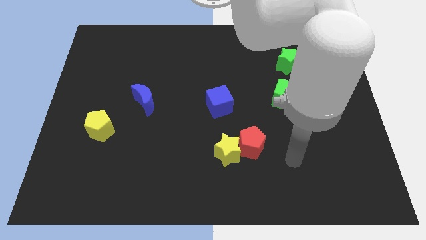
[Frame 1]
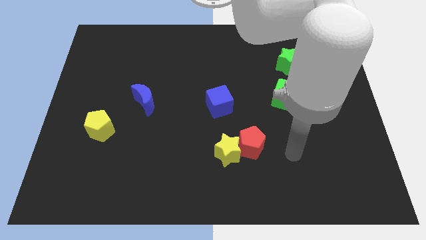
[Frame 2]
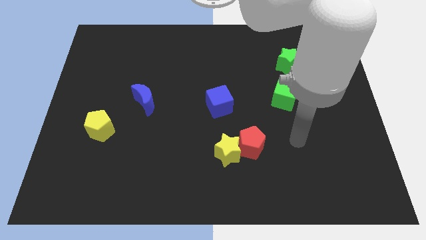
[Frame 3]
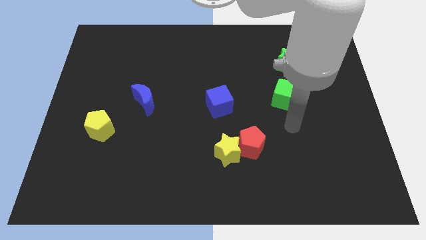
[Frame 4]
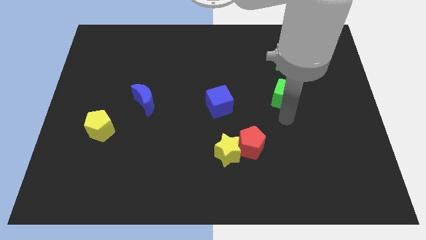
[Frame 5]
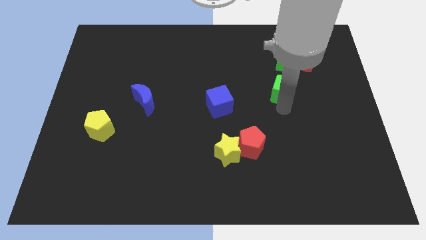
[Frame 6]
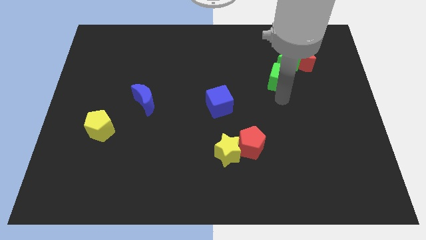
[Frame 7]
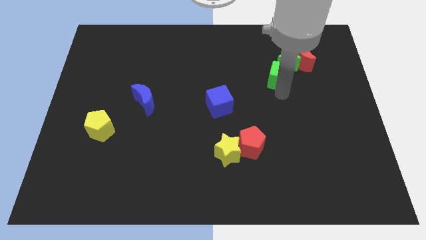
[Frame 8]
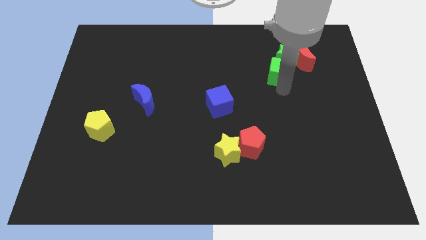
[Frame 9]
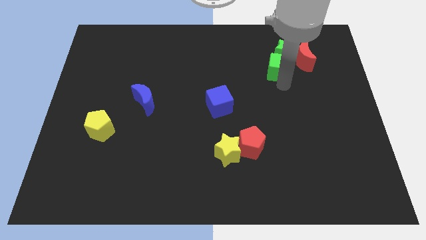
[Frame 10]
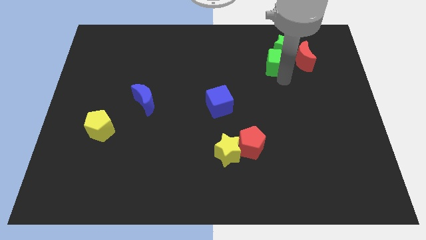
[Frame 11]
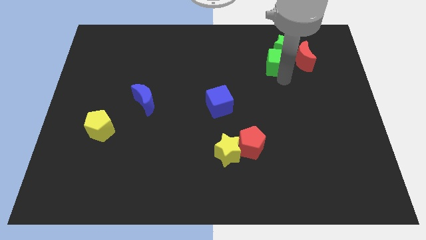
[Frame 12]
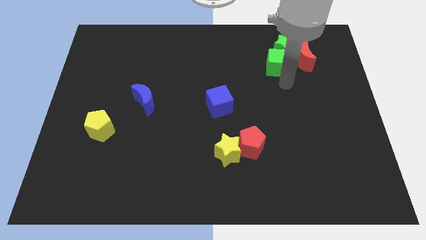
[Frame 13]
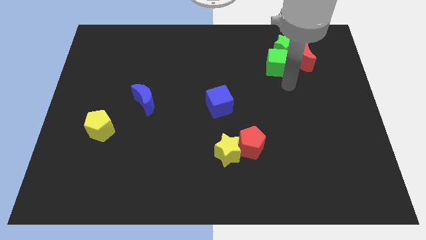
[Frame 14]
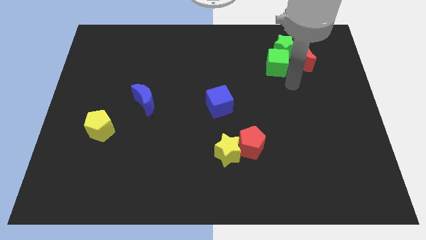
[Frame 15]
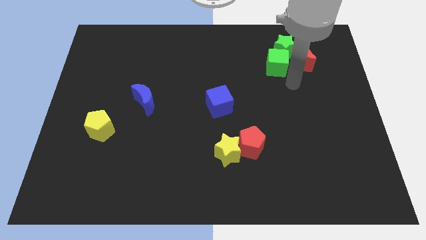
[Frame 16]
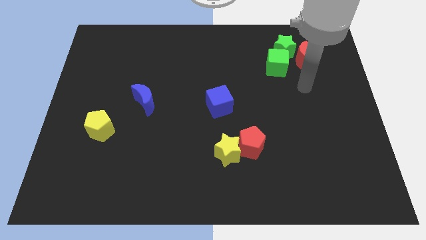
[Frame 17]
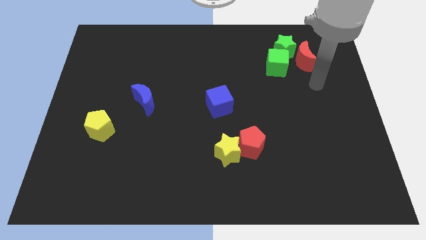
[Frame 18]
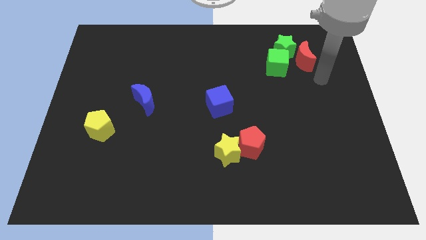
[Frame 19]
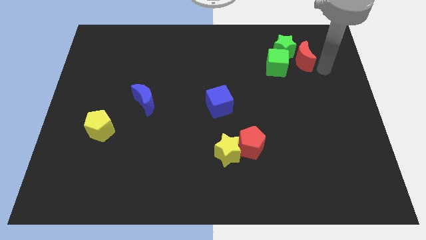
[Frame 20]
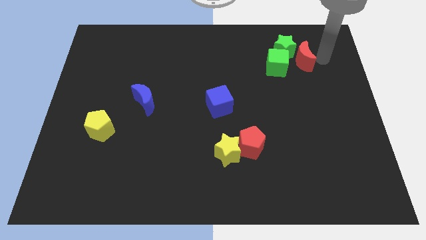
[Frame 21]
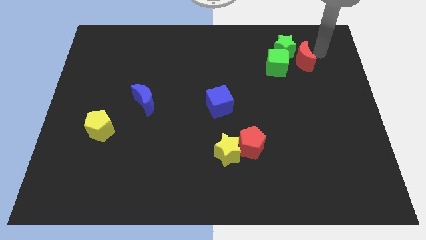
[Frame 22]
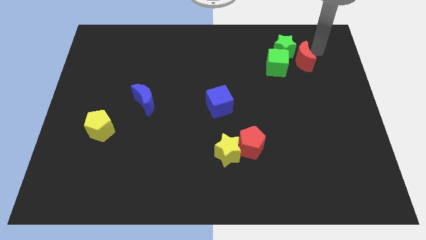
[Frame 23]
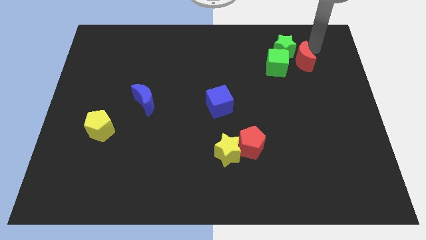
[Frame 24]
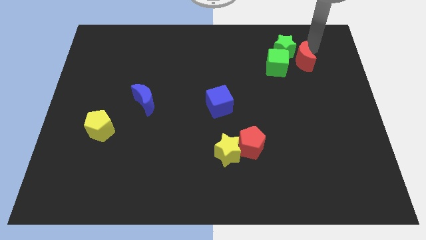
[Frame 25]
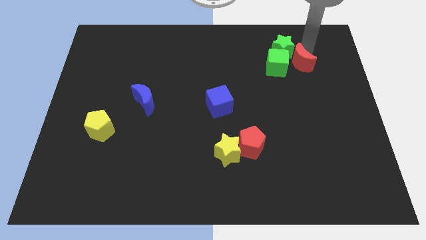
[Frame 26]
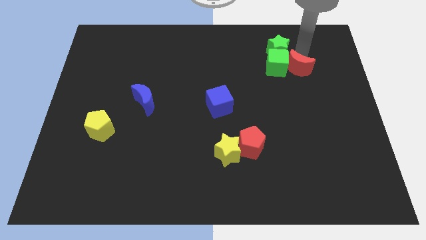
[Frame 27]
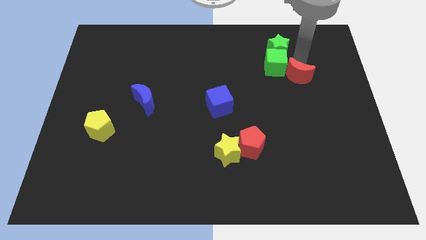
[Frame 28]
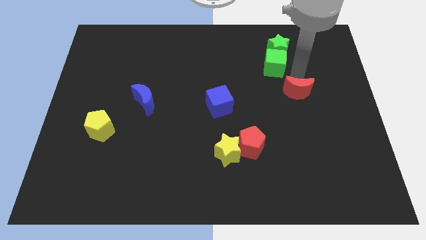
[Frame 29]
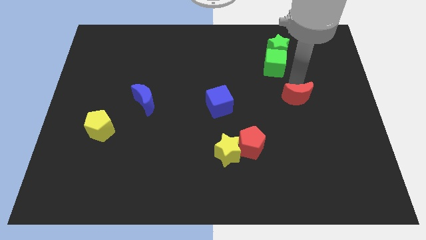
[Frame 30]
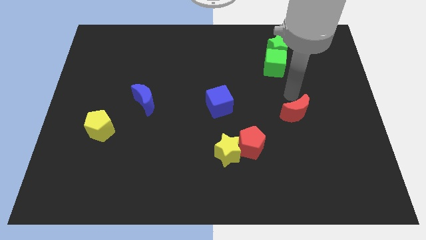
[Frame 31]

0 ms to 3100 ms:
move the red crescent towards the right side of the blue cube

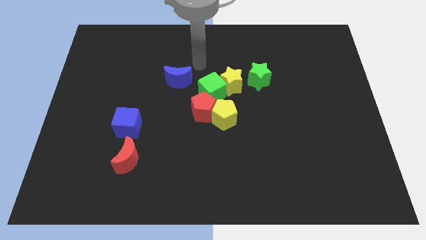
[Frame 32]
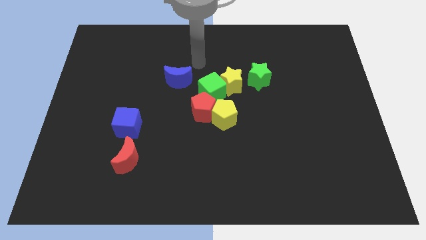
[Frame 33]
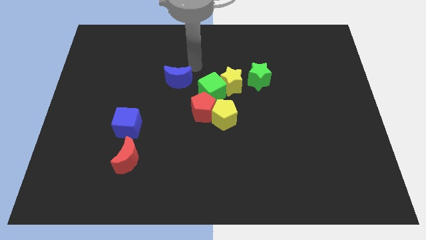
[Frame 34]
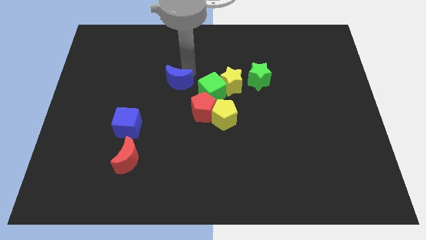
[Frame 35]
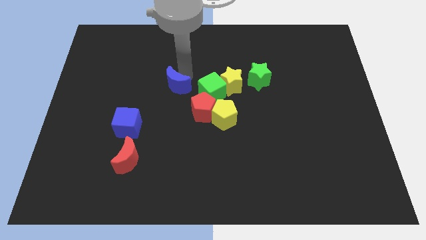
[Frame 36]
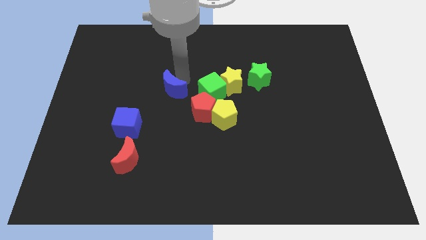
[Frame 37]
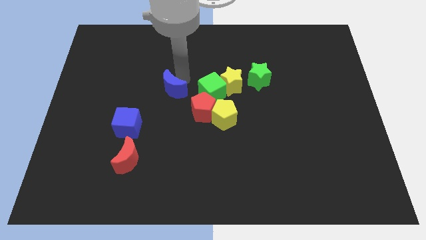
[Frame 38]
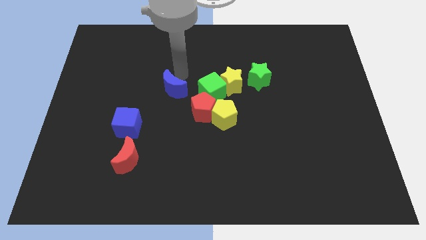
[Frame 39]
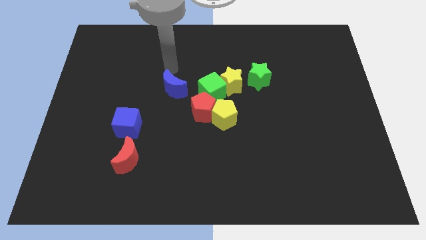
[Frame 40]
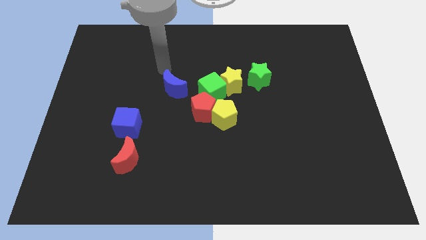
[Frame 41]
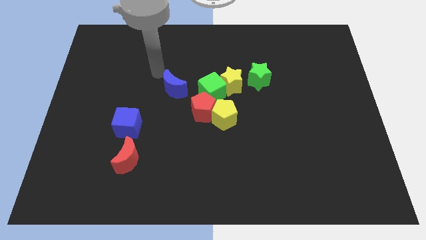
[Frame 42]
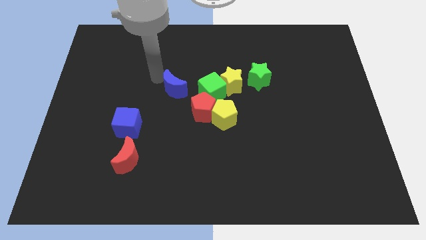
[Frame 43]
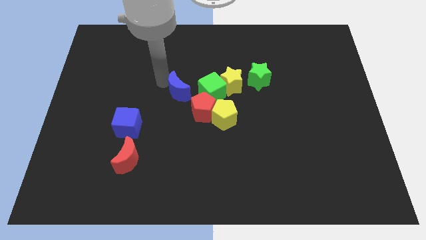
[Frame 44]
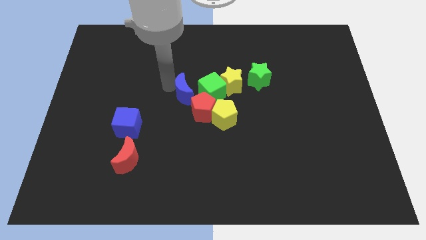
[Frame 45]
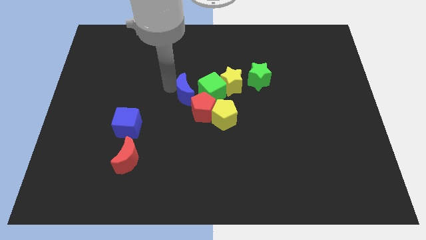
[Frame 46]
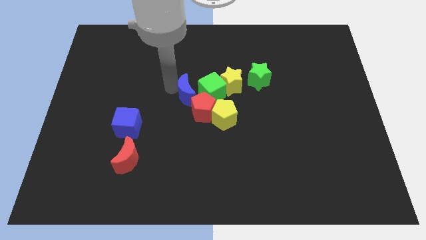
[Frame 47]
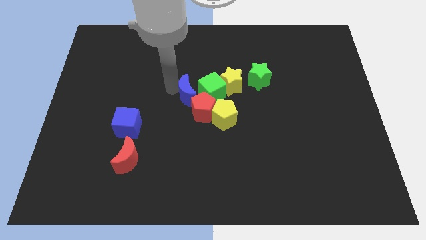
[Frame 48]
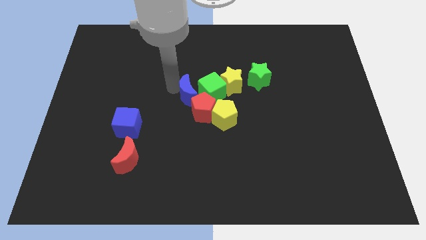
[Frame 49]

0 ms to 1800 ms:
move the blue moon to the top left side of the red pentagon

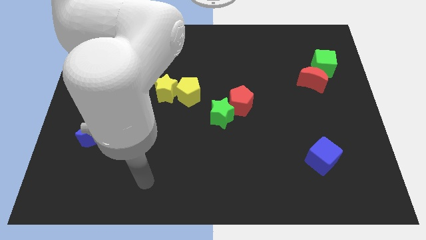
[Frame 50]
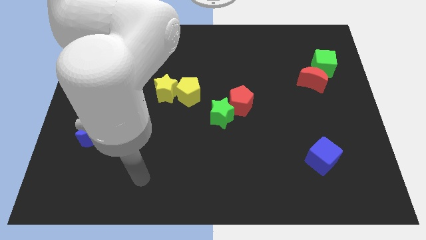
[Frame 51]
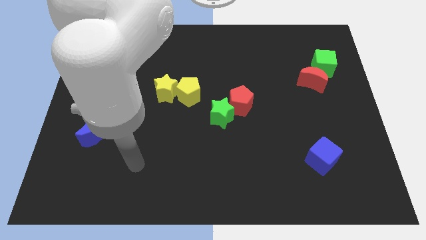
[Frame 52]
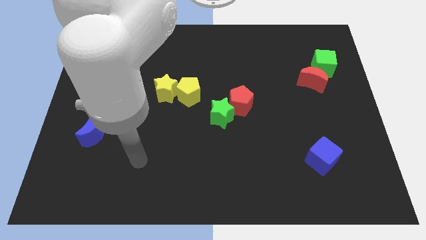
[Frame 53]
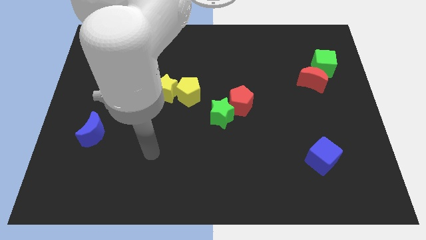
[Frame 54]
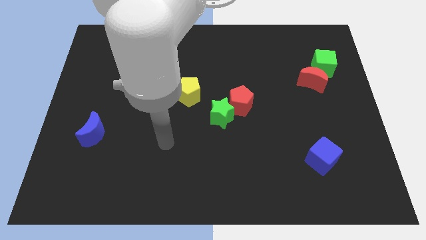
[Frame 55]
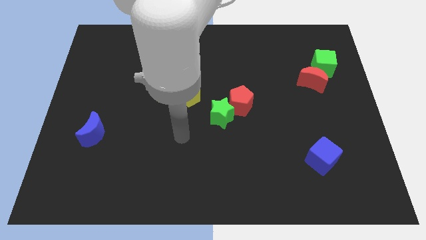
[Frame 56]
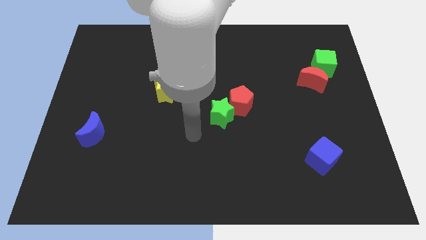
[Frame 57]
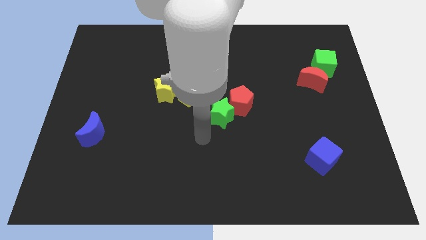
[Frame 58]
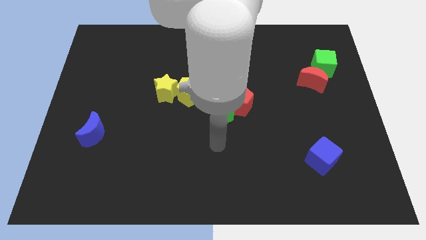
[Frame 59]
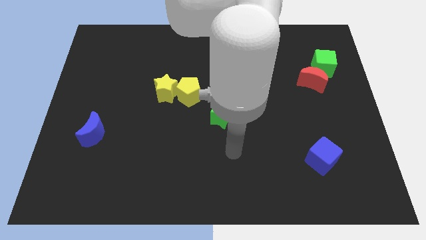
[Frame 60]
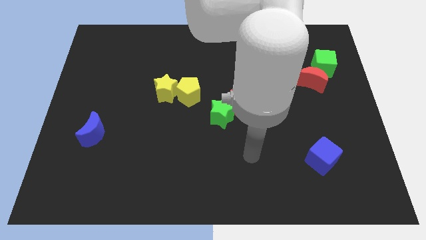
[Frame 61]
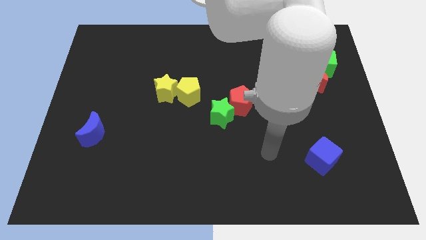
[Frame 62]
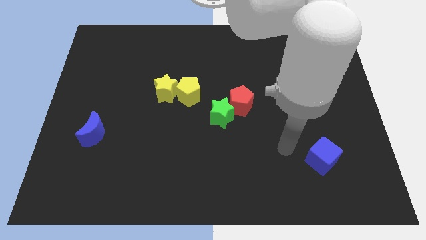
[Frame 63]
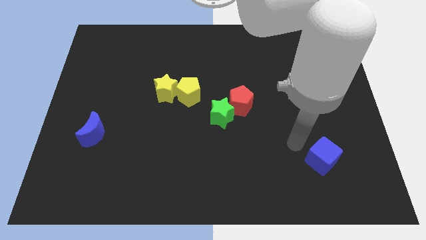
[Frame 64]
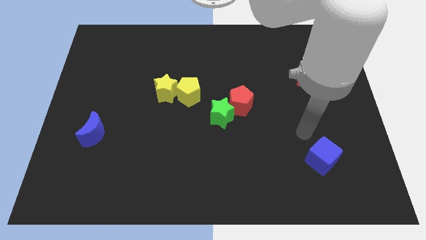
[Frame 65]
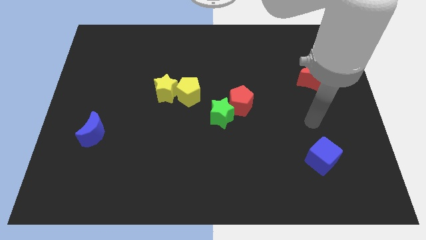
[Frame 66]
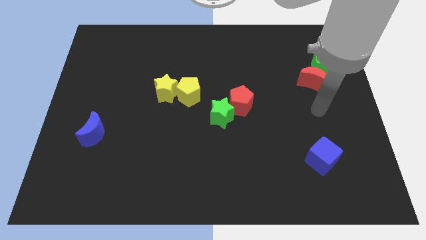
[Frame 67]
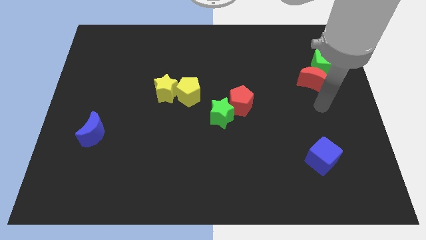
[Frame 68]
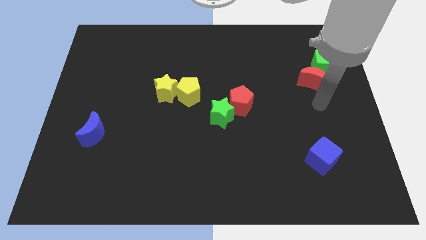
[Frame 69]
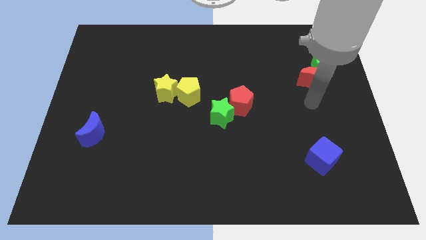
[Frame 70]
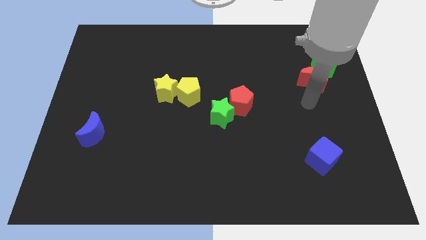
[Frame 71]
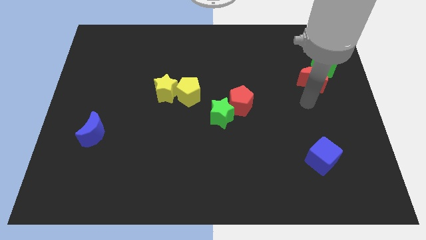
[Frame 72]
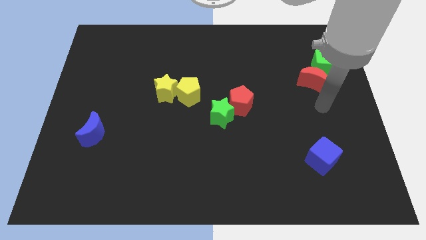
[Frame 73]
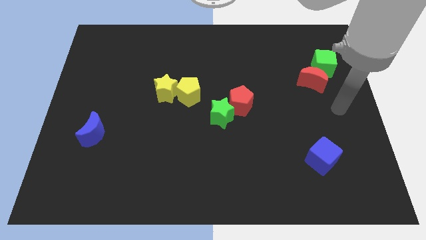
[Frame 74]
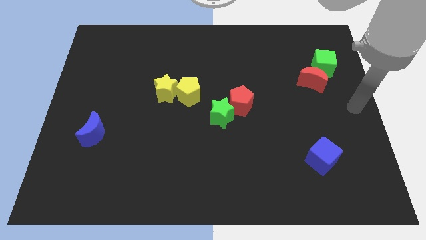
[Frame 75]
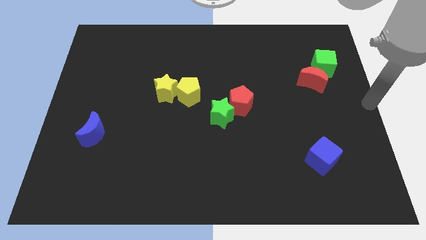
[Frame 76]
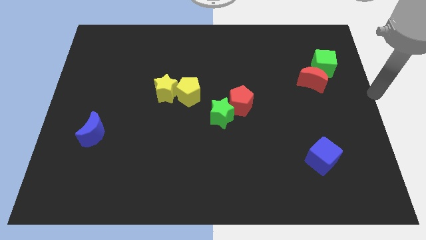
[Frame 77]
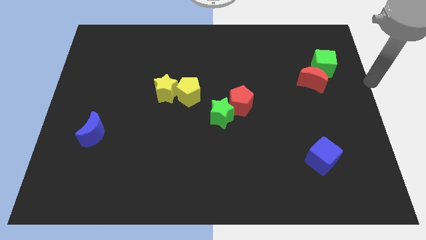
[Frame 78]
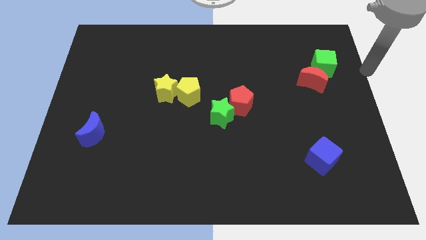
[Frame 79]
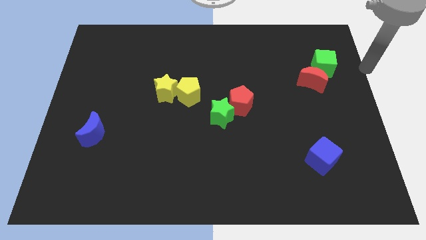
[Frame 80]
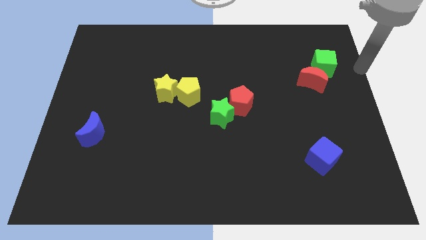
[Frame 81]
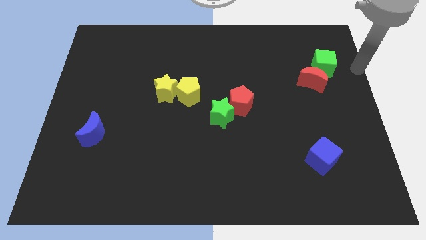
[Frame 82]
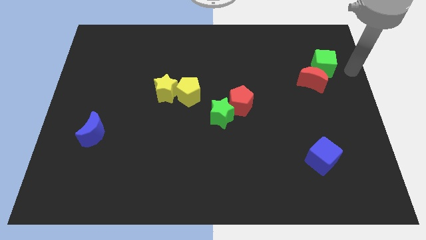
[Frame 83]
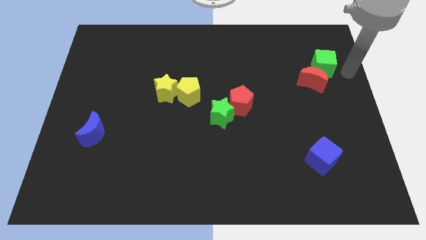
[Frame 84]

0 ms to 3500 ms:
point your arm to the right side of the green cube

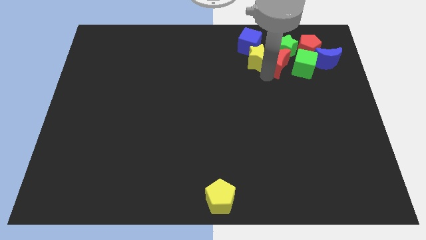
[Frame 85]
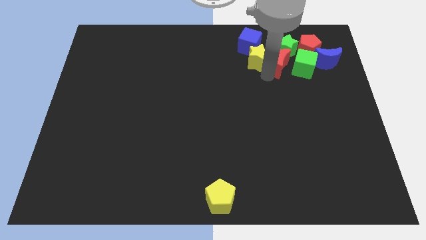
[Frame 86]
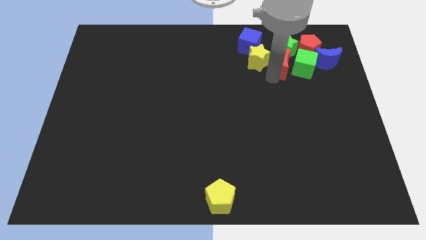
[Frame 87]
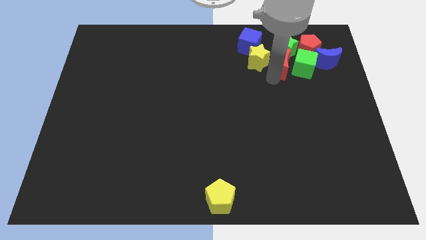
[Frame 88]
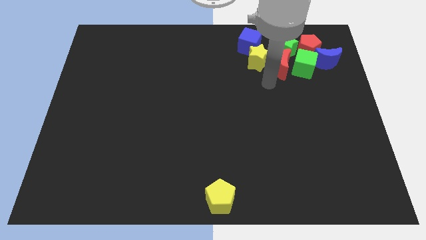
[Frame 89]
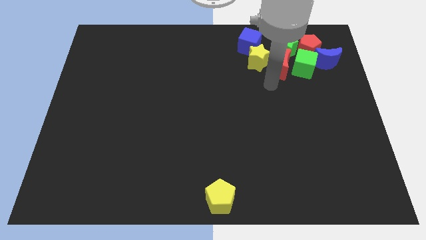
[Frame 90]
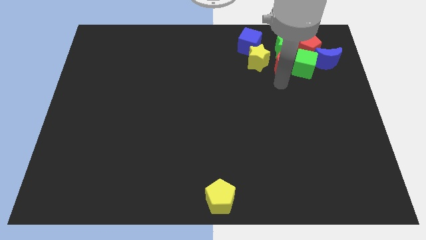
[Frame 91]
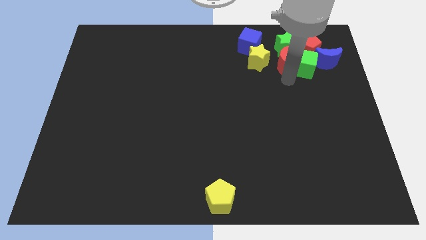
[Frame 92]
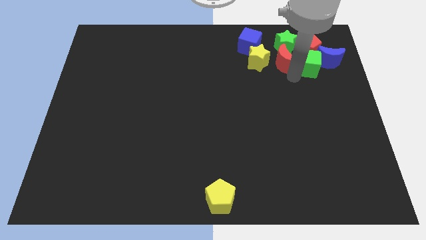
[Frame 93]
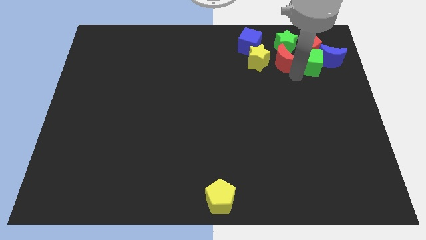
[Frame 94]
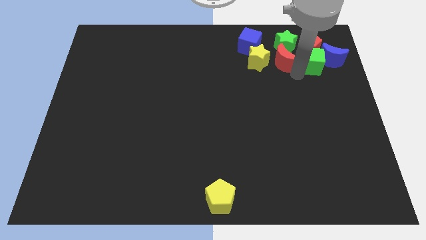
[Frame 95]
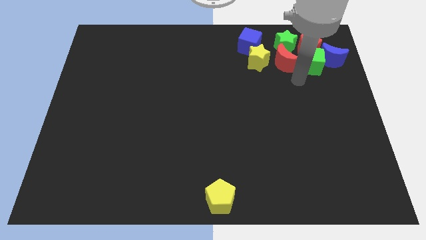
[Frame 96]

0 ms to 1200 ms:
place red moon in between the green cube and yellow star at the top right
